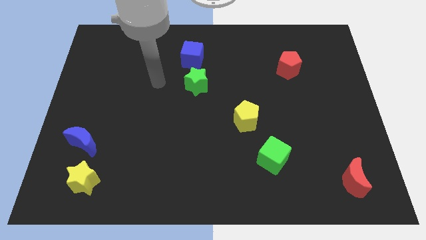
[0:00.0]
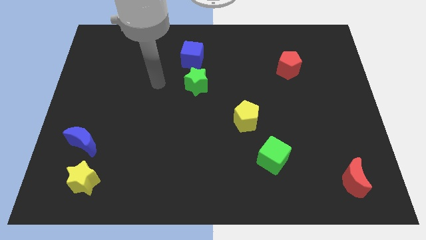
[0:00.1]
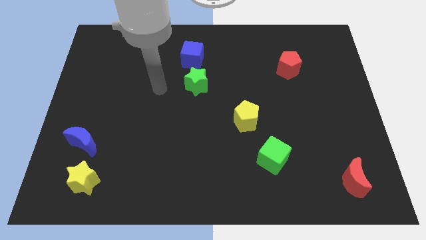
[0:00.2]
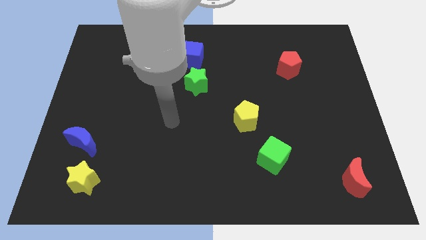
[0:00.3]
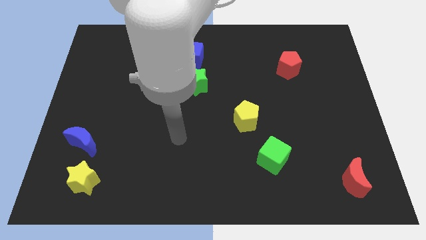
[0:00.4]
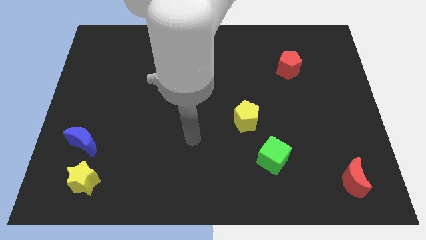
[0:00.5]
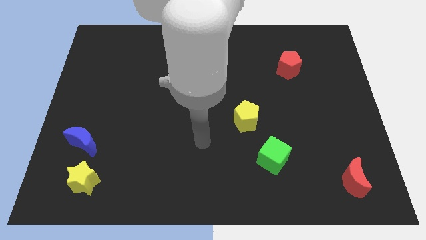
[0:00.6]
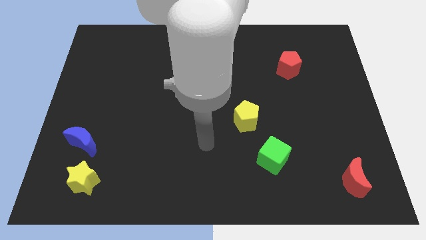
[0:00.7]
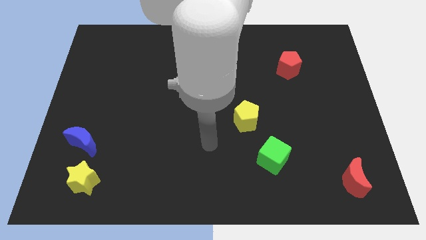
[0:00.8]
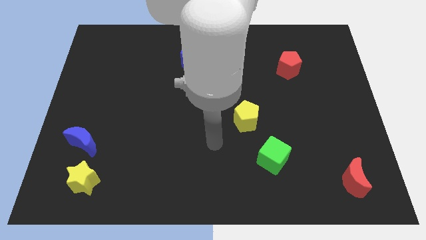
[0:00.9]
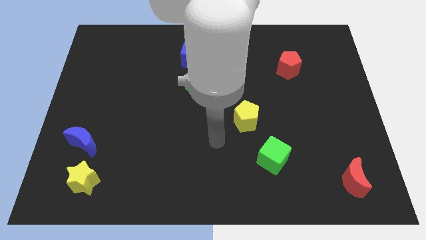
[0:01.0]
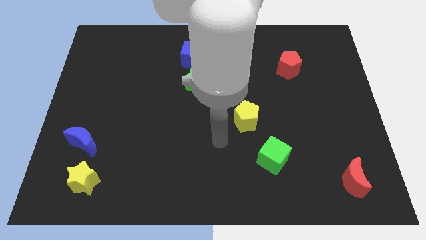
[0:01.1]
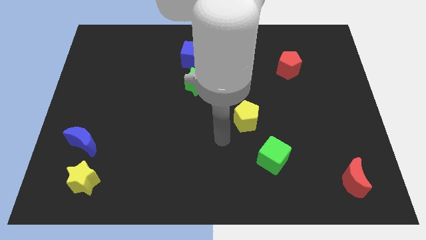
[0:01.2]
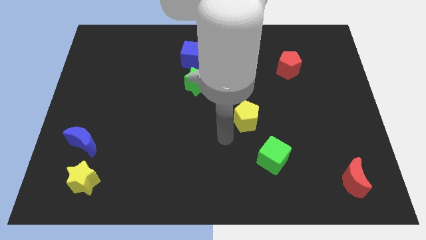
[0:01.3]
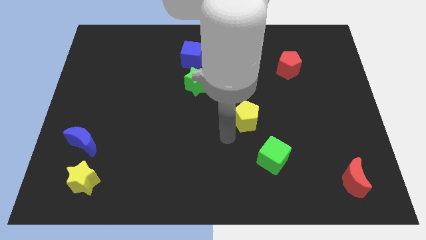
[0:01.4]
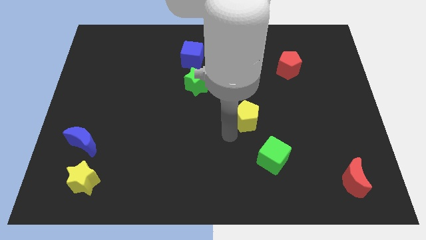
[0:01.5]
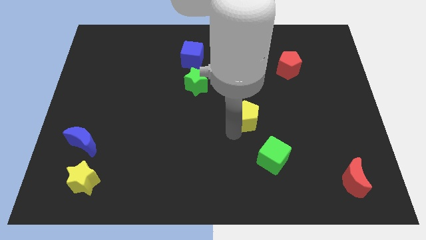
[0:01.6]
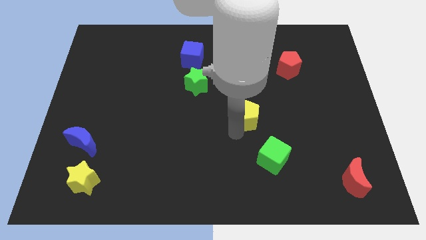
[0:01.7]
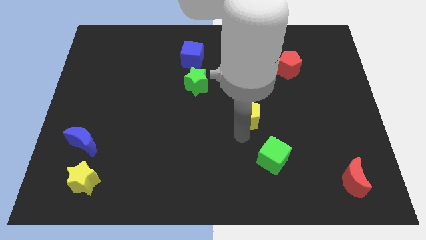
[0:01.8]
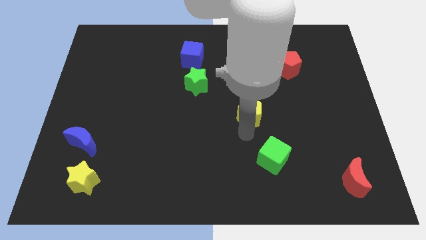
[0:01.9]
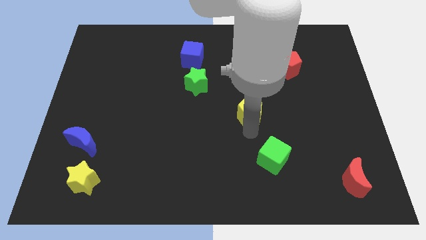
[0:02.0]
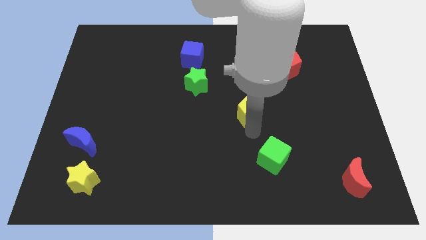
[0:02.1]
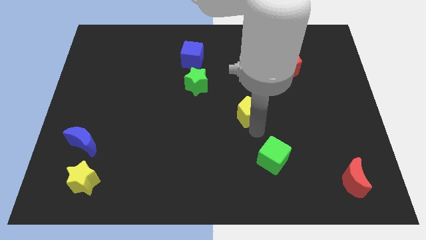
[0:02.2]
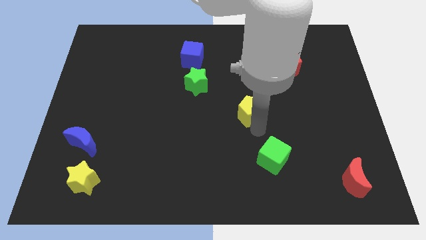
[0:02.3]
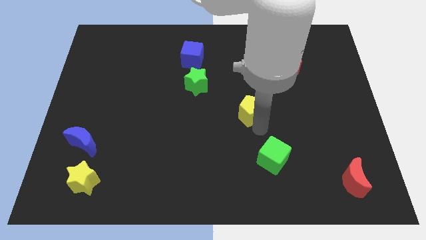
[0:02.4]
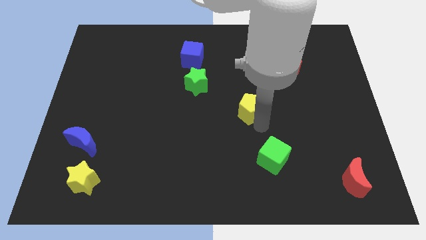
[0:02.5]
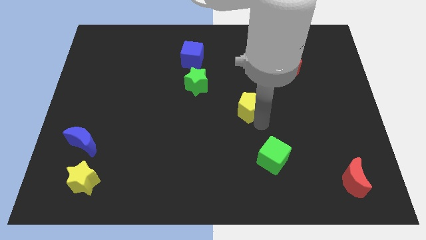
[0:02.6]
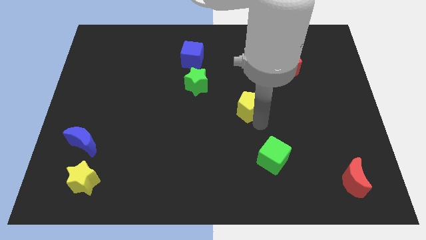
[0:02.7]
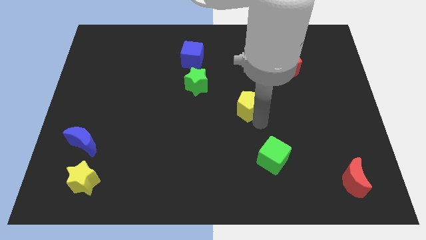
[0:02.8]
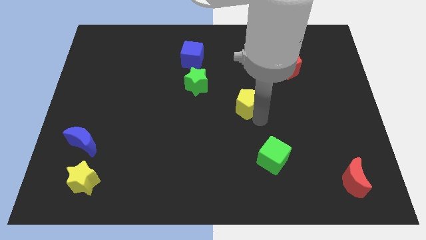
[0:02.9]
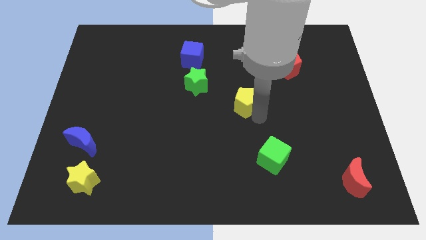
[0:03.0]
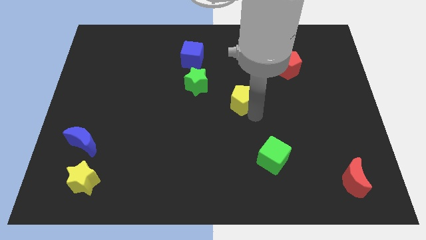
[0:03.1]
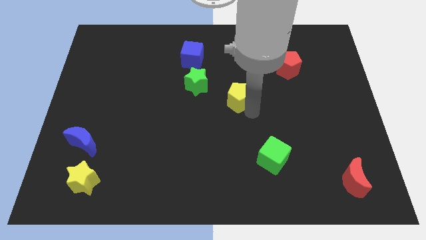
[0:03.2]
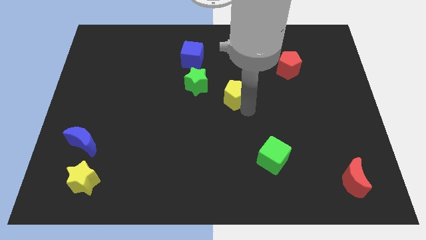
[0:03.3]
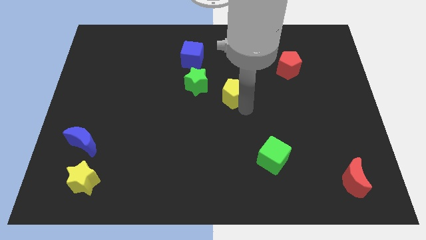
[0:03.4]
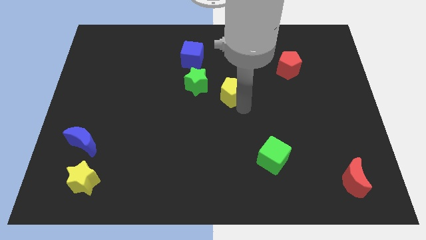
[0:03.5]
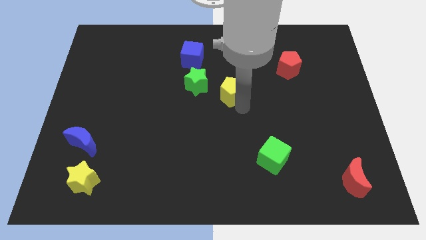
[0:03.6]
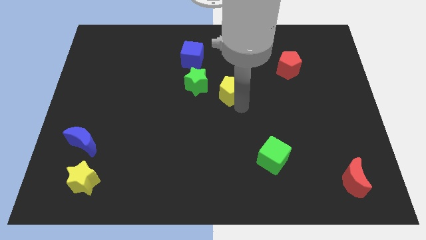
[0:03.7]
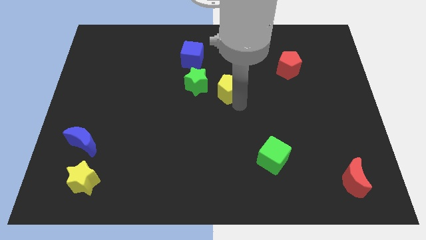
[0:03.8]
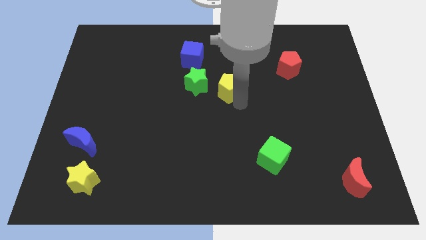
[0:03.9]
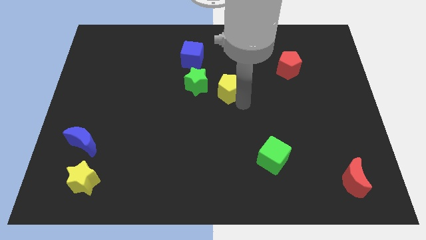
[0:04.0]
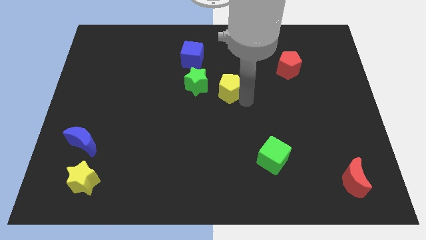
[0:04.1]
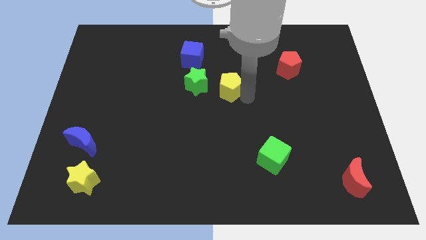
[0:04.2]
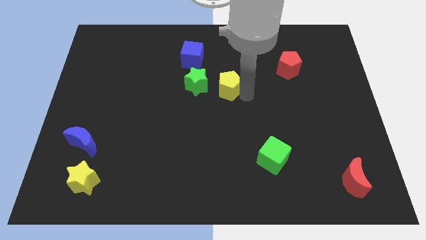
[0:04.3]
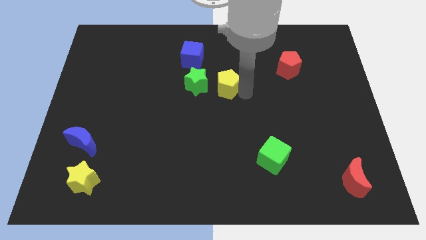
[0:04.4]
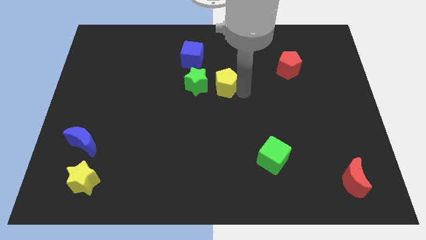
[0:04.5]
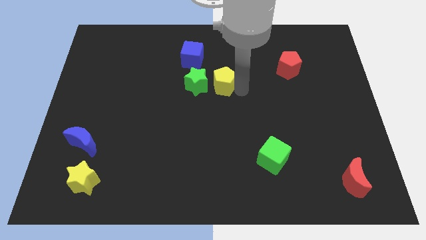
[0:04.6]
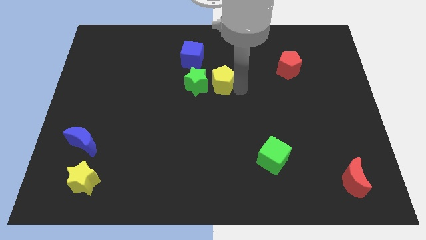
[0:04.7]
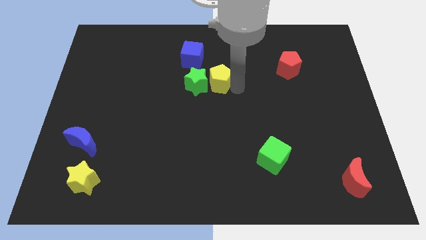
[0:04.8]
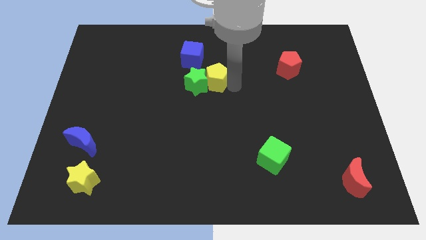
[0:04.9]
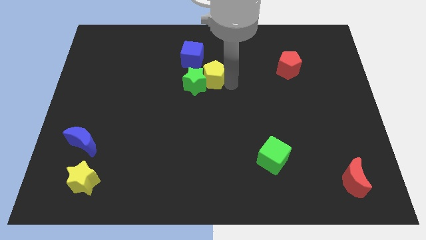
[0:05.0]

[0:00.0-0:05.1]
put the yellow pentagon next to the green star

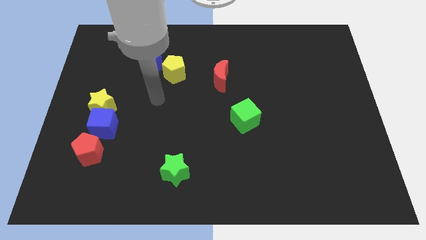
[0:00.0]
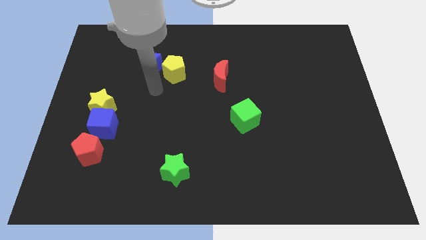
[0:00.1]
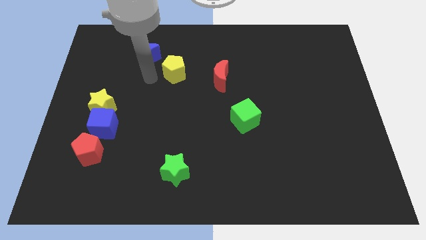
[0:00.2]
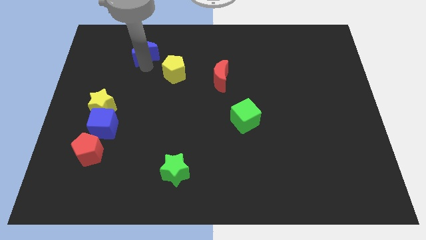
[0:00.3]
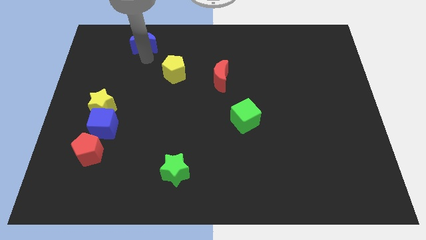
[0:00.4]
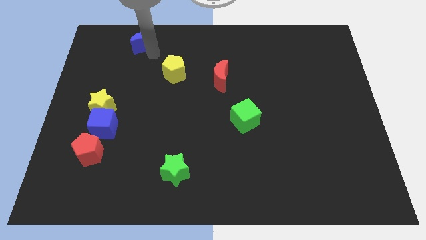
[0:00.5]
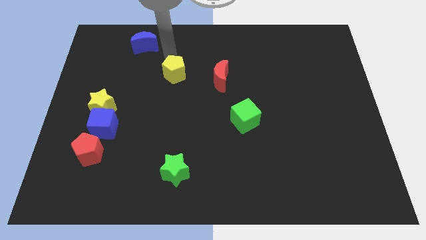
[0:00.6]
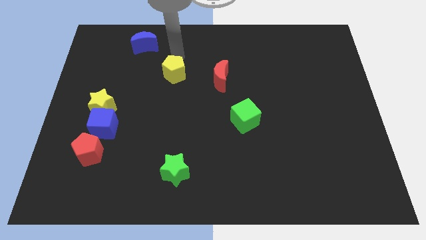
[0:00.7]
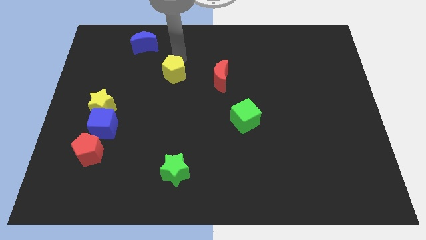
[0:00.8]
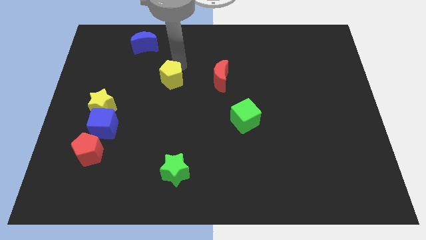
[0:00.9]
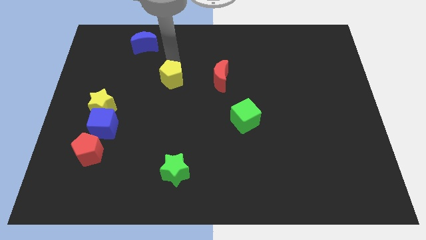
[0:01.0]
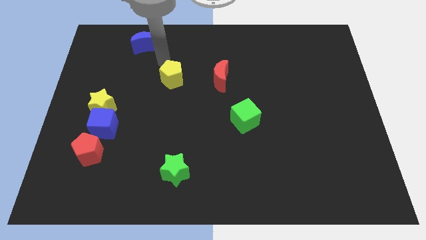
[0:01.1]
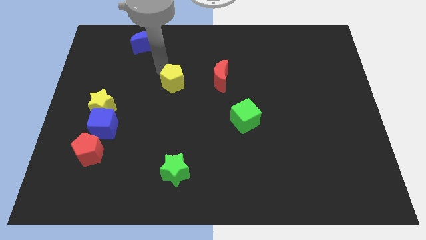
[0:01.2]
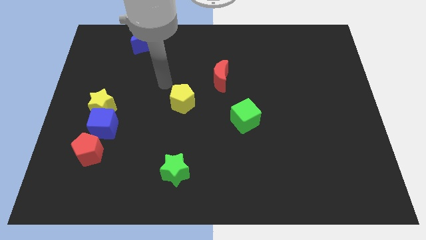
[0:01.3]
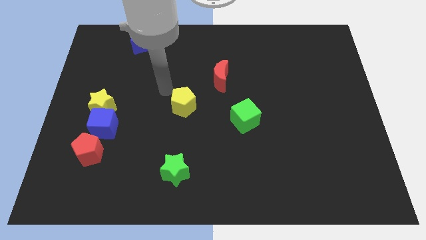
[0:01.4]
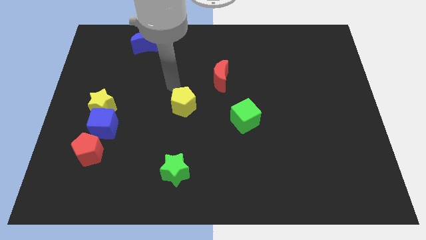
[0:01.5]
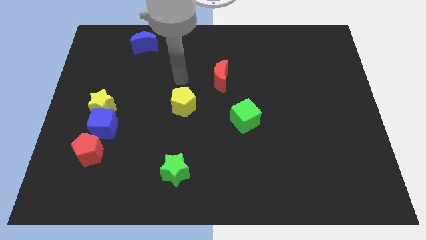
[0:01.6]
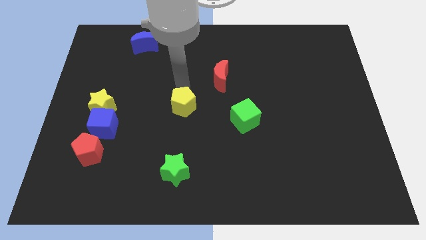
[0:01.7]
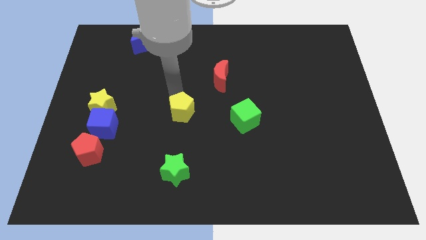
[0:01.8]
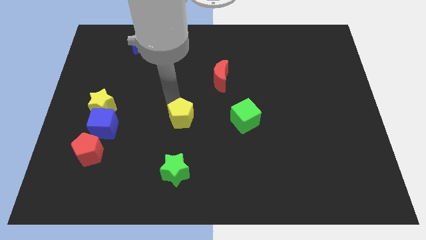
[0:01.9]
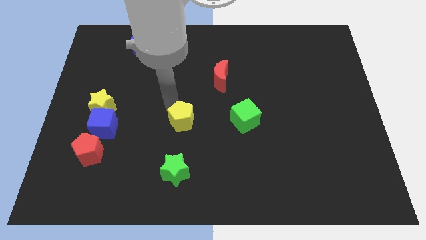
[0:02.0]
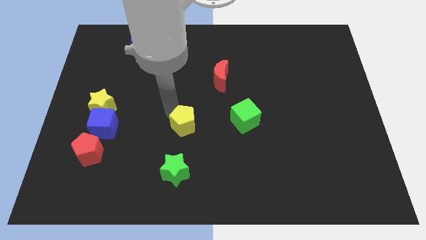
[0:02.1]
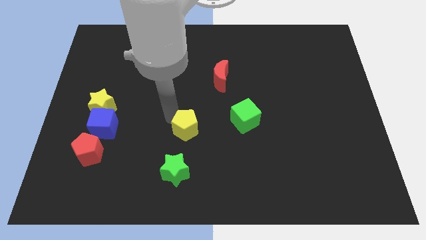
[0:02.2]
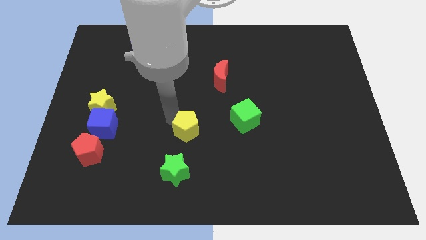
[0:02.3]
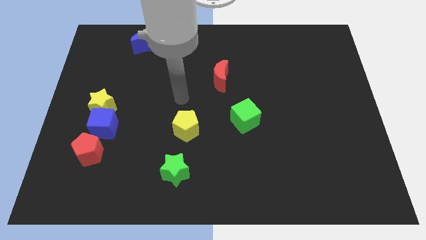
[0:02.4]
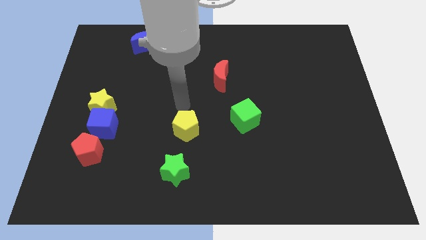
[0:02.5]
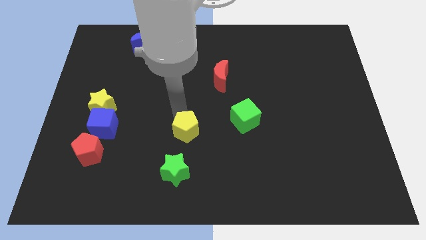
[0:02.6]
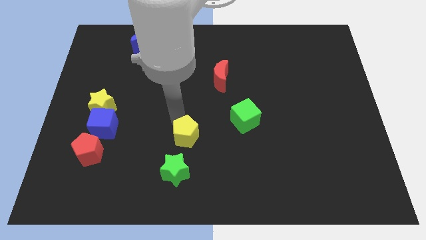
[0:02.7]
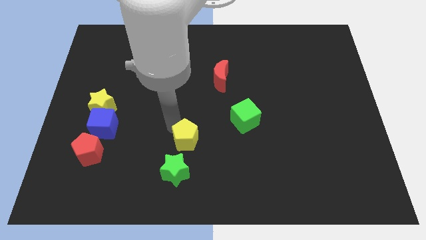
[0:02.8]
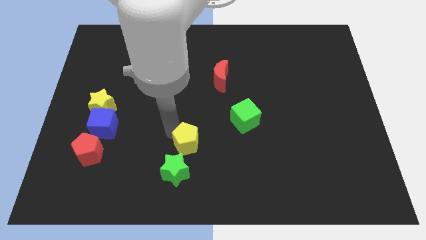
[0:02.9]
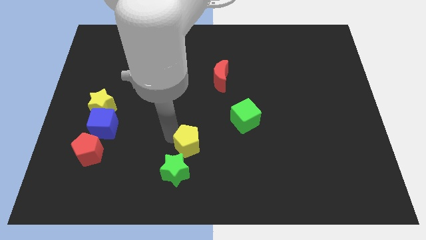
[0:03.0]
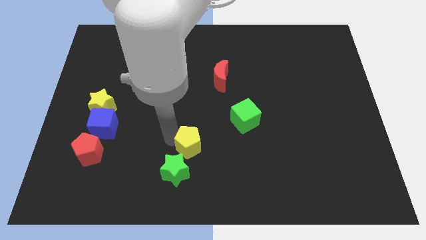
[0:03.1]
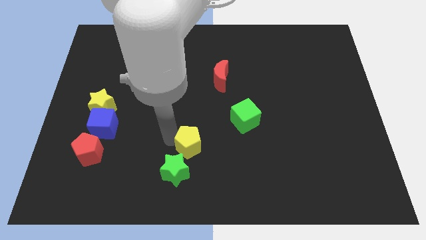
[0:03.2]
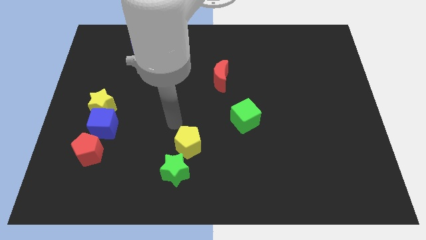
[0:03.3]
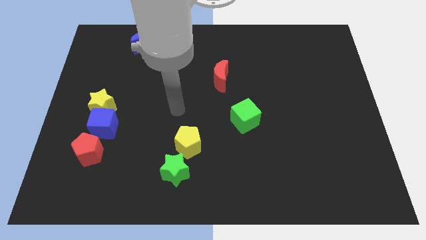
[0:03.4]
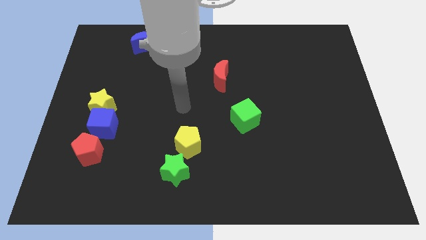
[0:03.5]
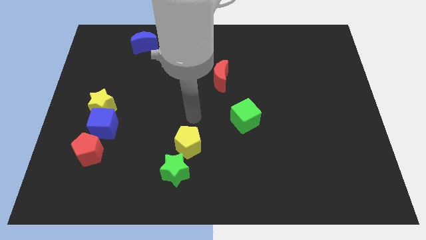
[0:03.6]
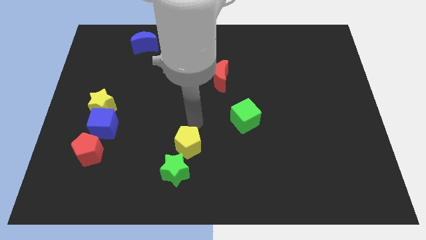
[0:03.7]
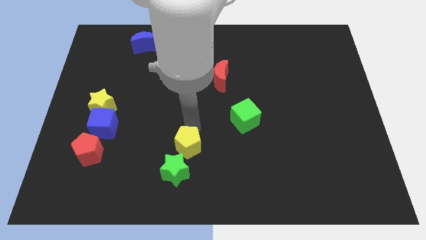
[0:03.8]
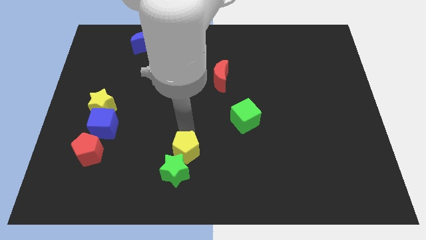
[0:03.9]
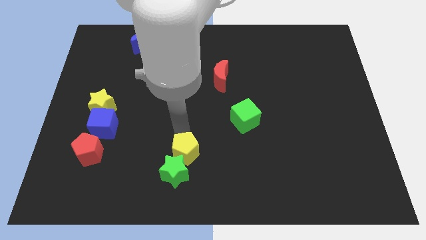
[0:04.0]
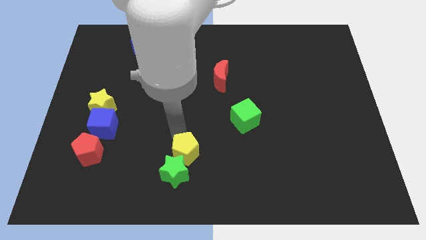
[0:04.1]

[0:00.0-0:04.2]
slide the yellow pentagon next to the green star
